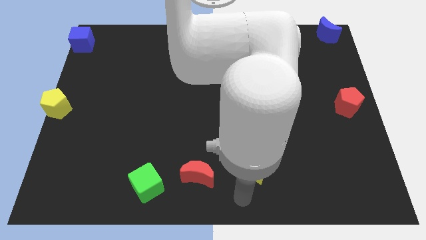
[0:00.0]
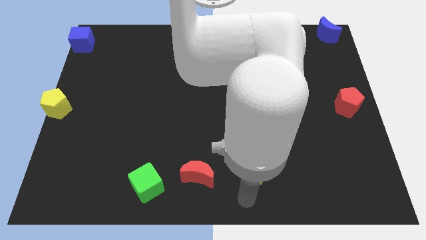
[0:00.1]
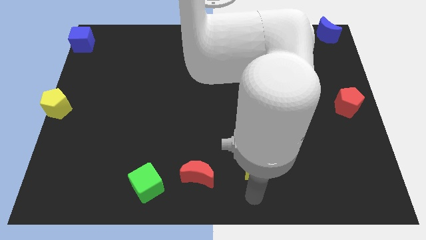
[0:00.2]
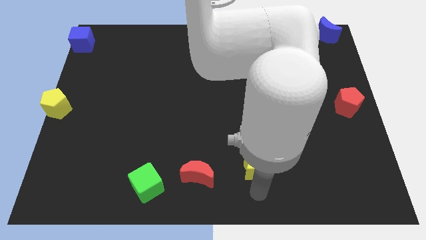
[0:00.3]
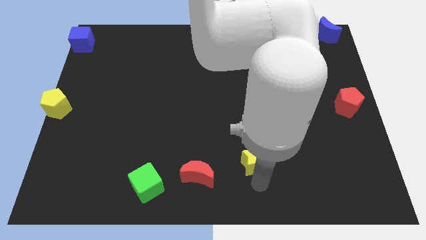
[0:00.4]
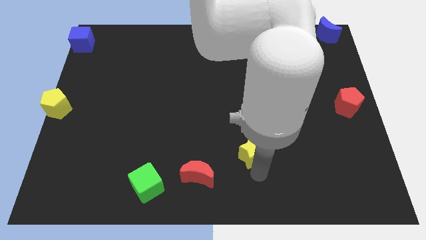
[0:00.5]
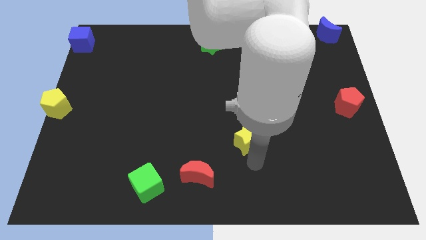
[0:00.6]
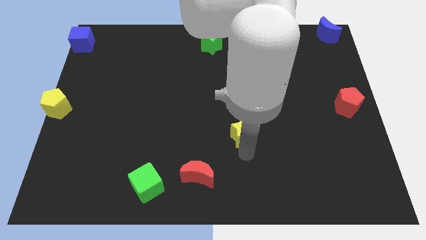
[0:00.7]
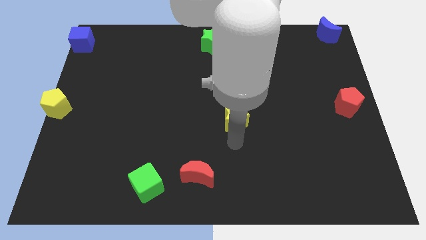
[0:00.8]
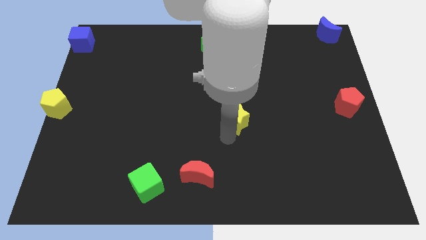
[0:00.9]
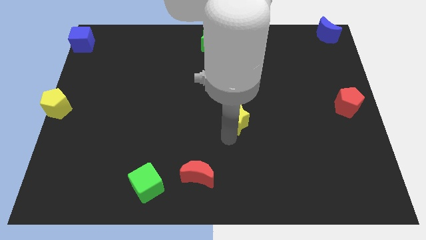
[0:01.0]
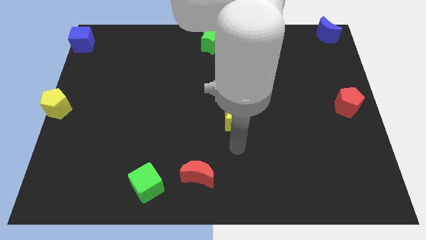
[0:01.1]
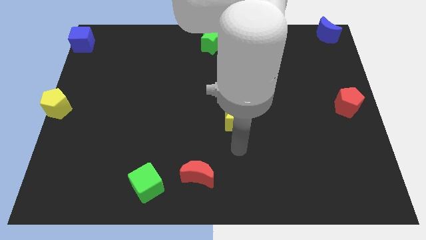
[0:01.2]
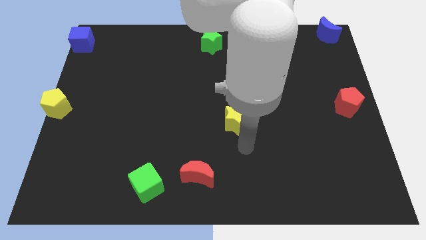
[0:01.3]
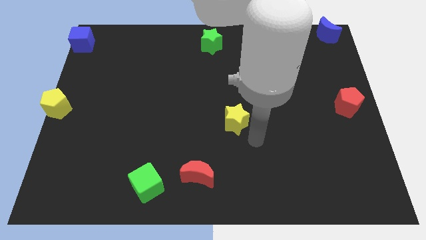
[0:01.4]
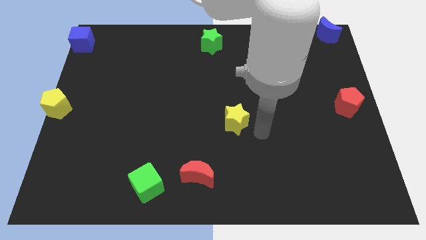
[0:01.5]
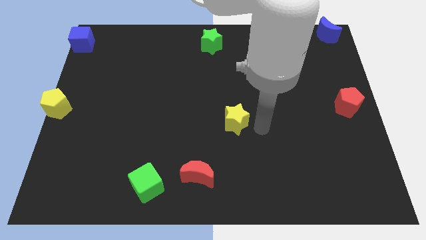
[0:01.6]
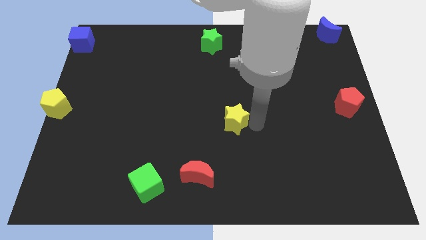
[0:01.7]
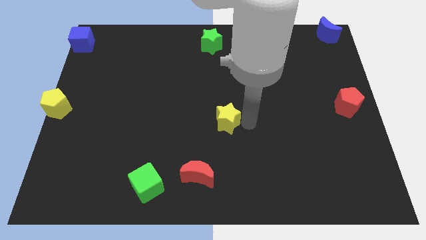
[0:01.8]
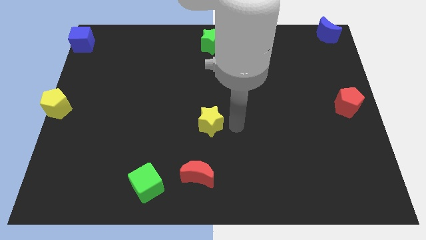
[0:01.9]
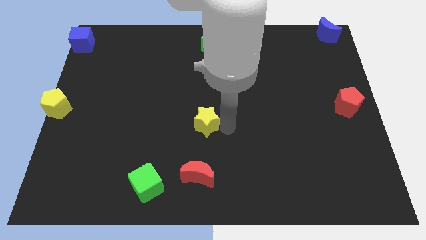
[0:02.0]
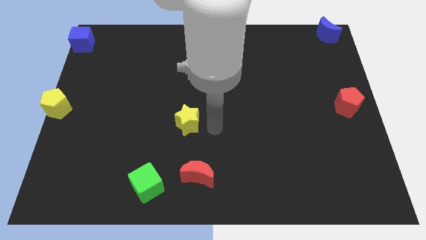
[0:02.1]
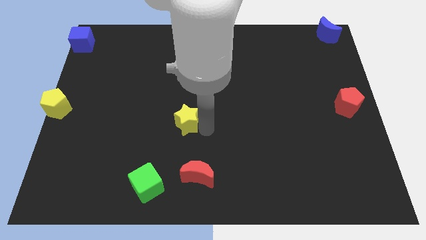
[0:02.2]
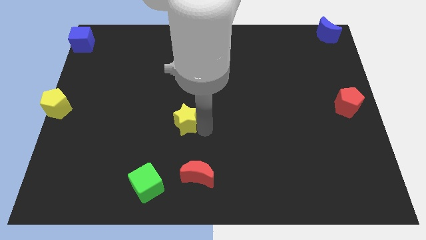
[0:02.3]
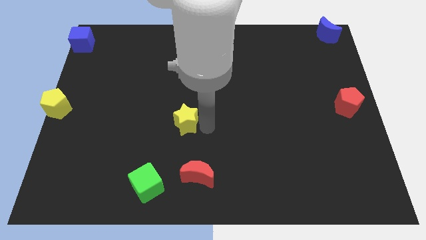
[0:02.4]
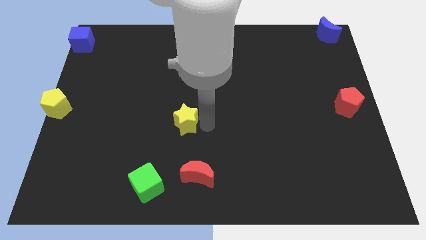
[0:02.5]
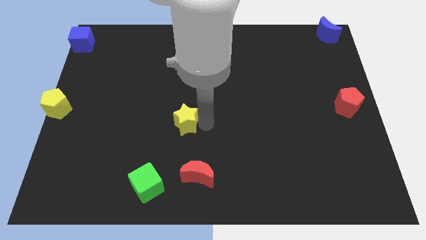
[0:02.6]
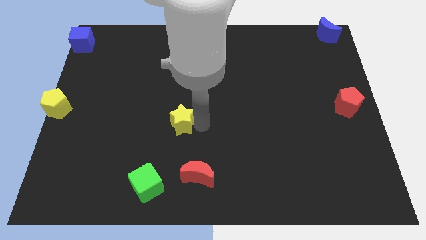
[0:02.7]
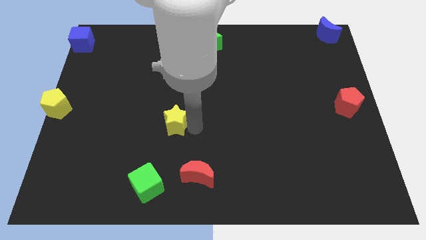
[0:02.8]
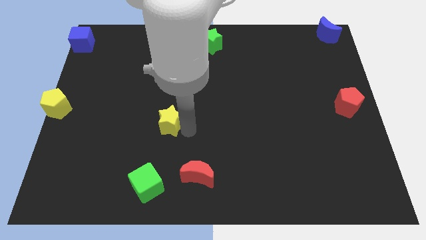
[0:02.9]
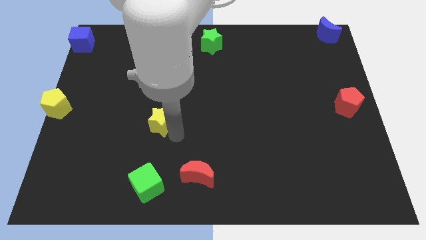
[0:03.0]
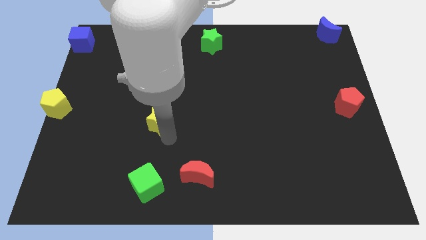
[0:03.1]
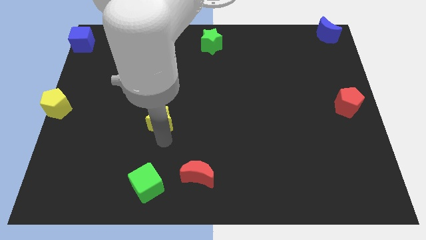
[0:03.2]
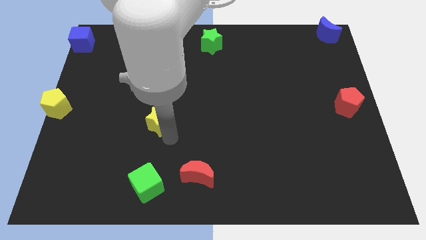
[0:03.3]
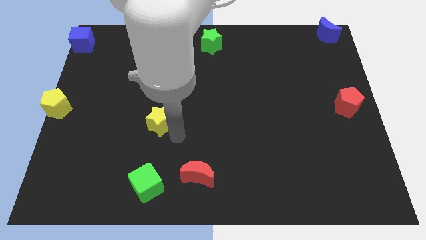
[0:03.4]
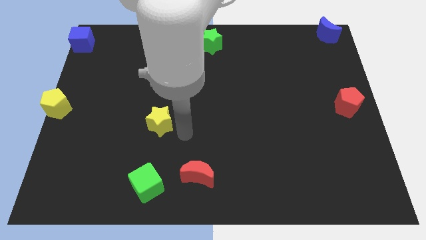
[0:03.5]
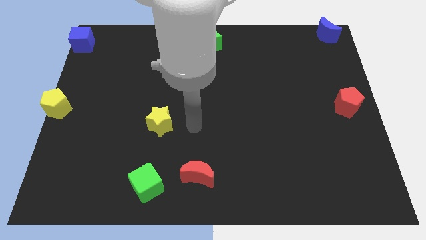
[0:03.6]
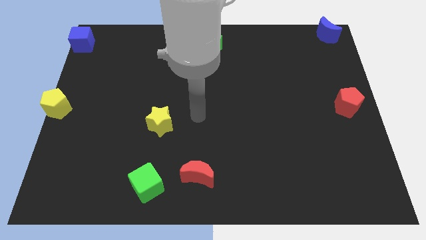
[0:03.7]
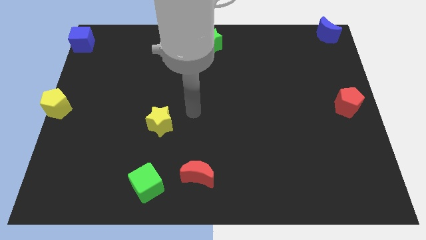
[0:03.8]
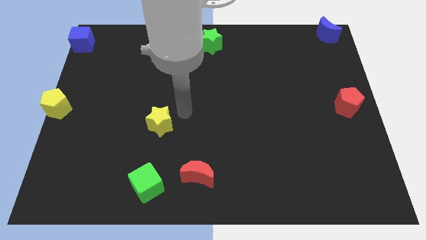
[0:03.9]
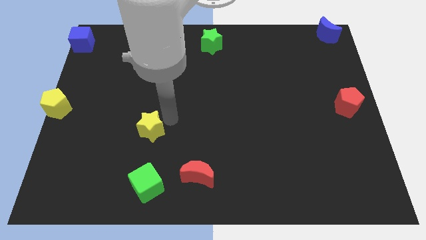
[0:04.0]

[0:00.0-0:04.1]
place the yellow star vertically above the green cube

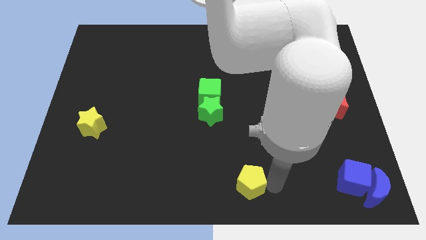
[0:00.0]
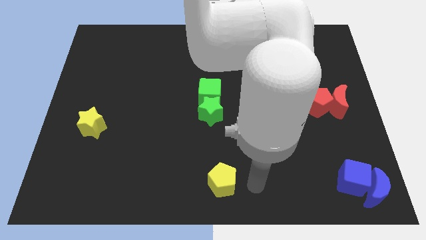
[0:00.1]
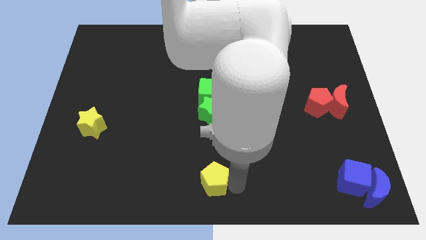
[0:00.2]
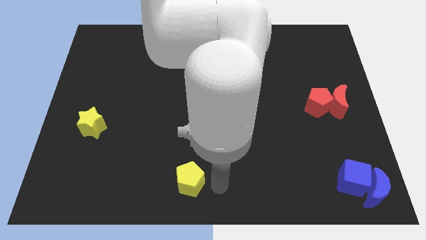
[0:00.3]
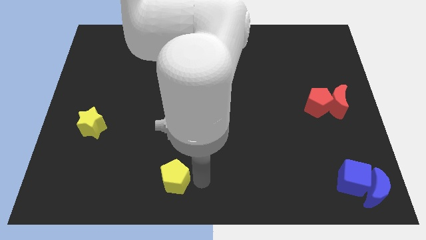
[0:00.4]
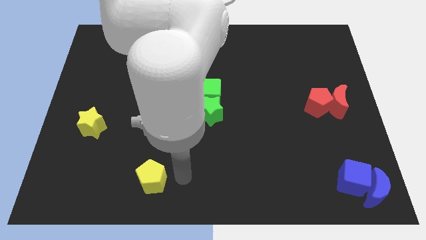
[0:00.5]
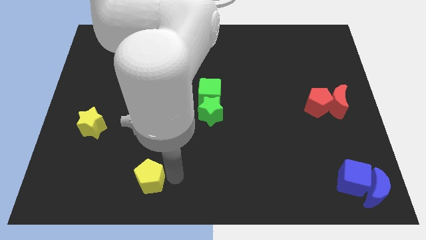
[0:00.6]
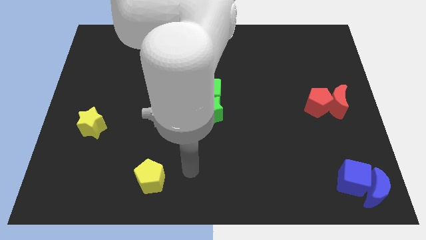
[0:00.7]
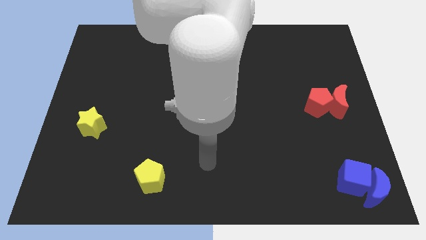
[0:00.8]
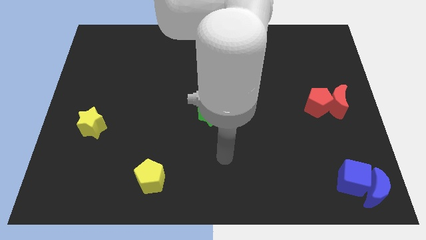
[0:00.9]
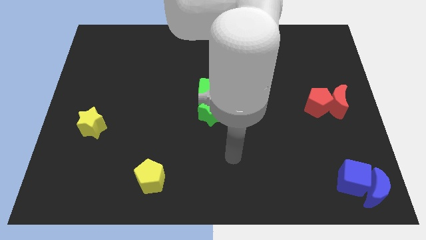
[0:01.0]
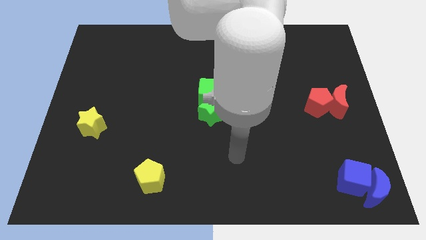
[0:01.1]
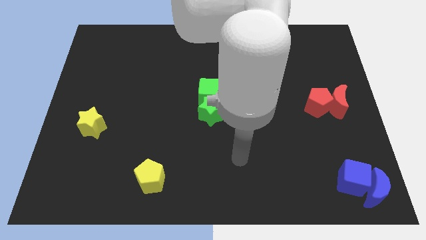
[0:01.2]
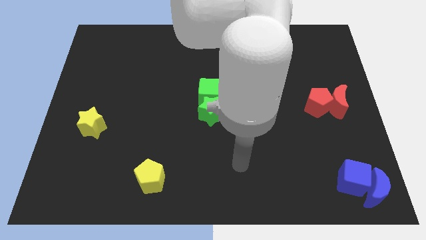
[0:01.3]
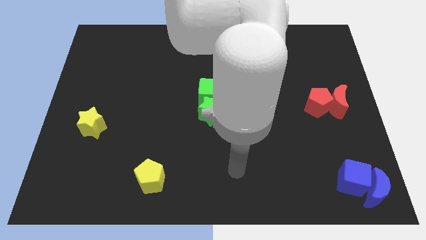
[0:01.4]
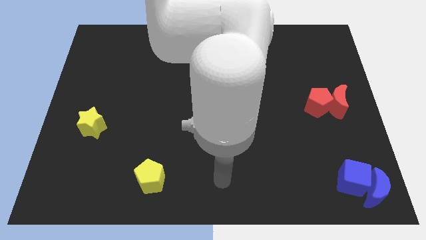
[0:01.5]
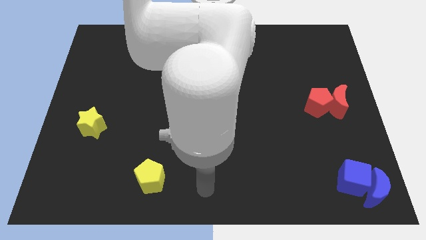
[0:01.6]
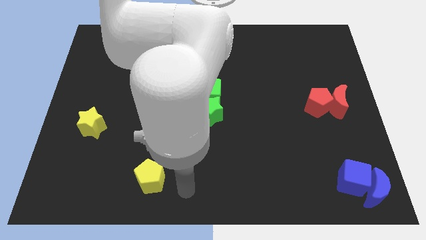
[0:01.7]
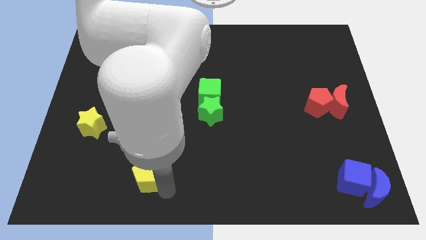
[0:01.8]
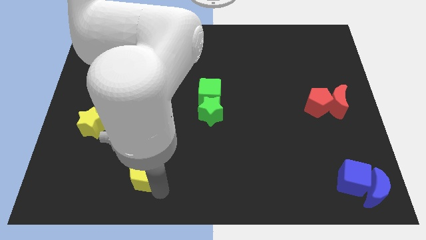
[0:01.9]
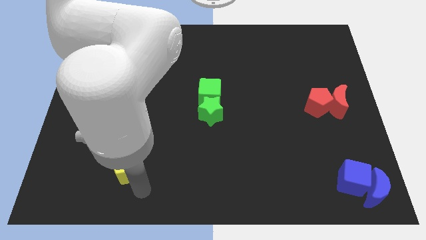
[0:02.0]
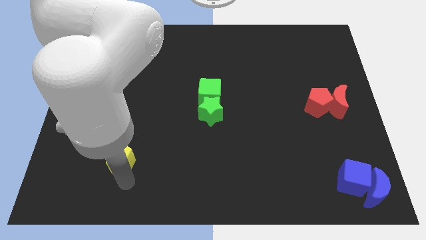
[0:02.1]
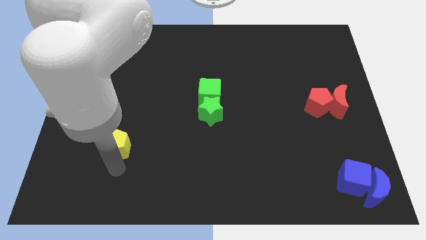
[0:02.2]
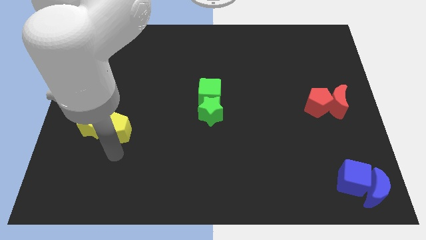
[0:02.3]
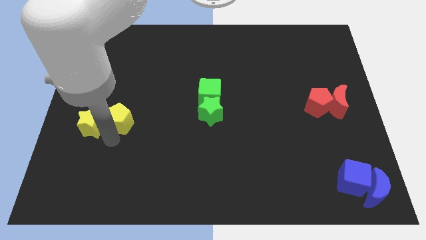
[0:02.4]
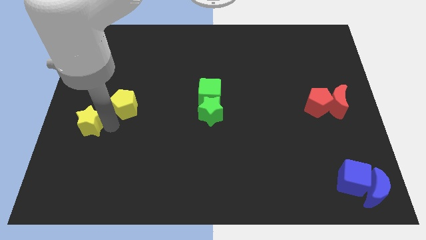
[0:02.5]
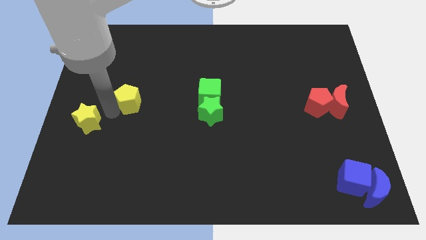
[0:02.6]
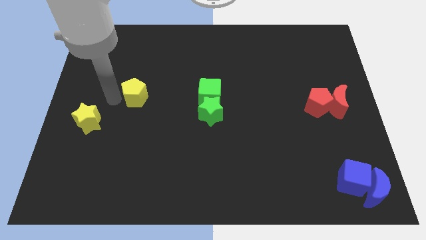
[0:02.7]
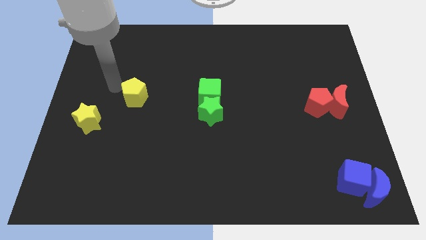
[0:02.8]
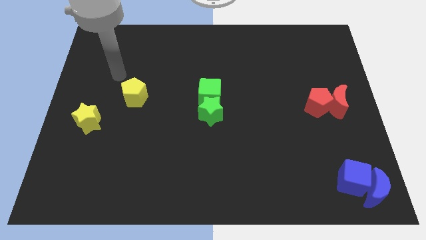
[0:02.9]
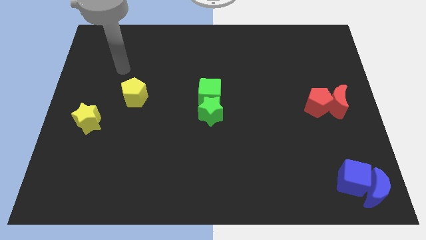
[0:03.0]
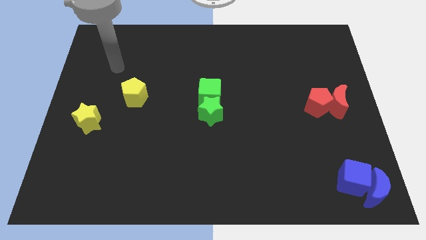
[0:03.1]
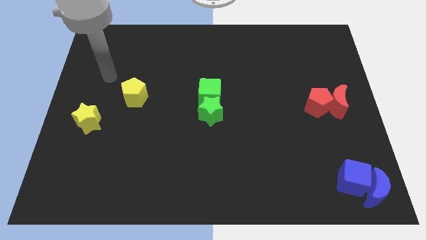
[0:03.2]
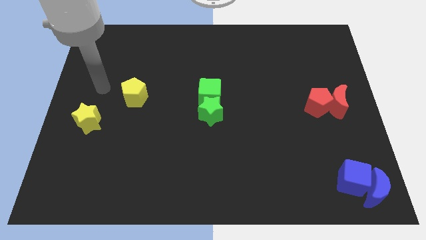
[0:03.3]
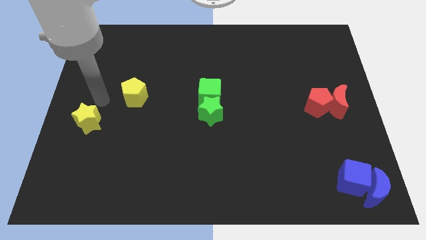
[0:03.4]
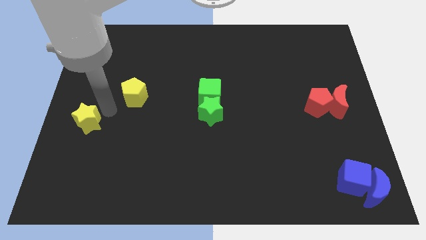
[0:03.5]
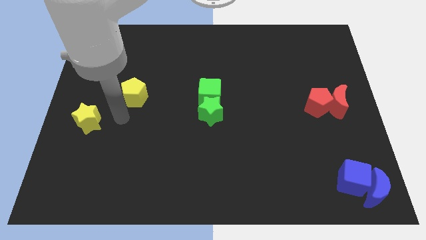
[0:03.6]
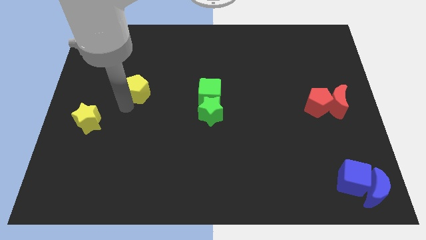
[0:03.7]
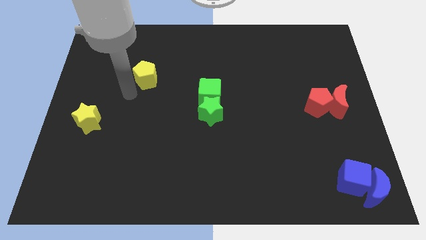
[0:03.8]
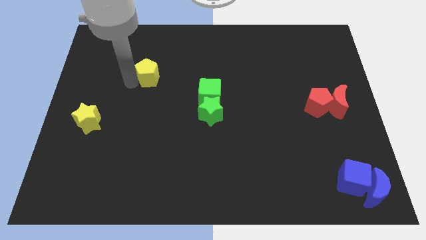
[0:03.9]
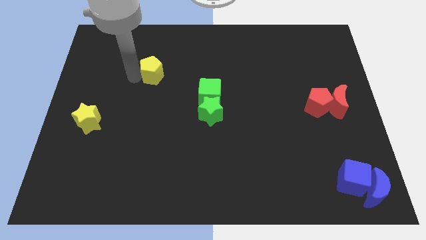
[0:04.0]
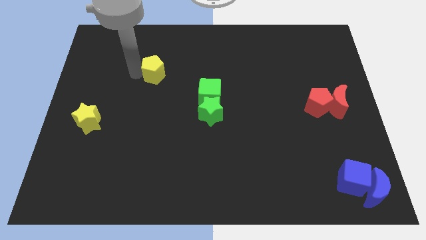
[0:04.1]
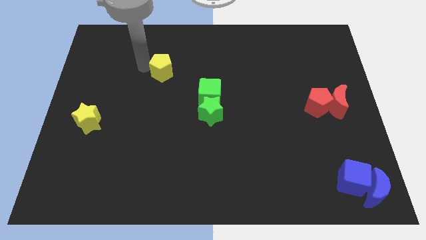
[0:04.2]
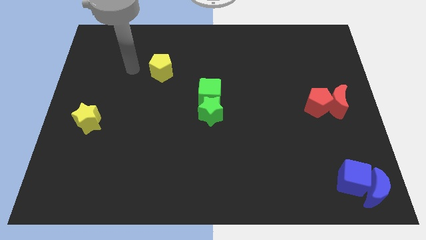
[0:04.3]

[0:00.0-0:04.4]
move the yellow pentagon towards the top center of the board

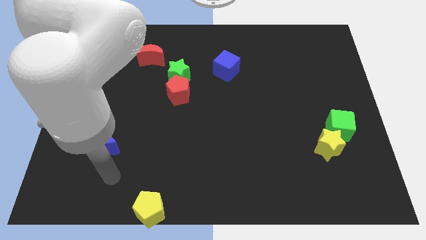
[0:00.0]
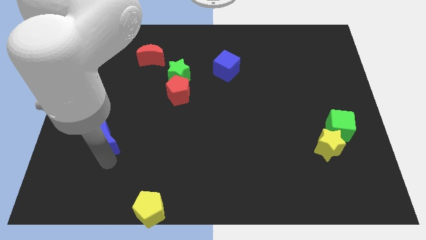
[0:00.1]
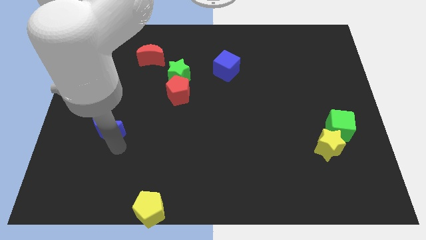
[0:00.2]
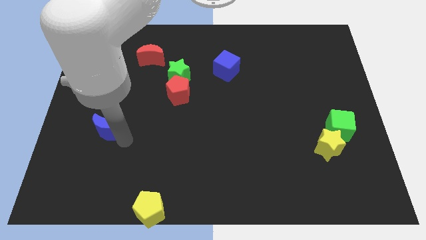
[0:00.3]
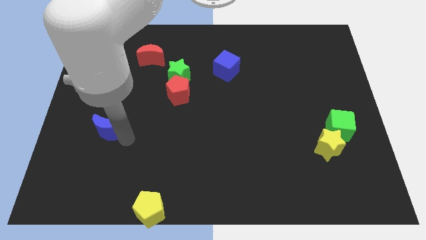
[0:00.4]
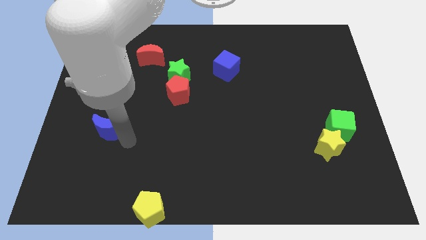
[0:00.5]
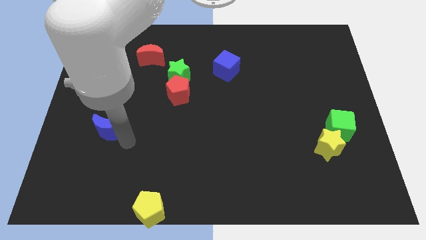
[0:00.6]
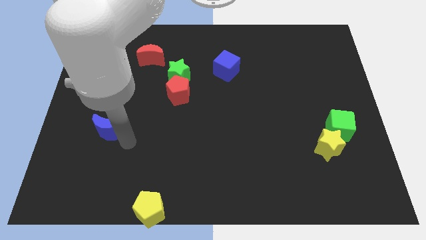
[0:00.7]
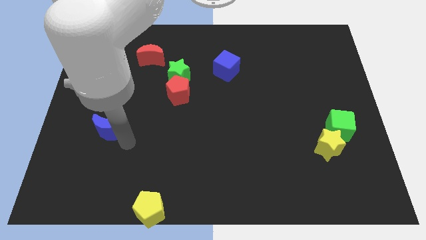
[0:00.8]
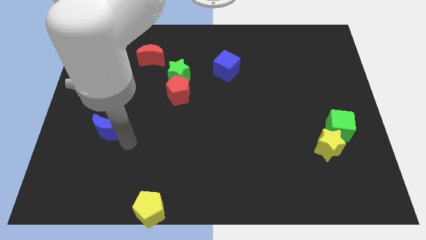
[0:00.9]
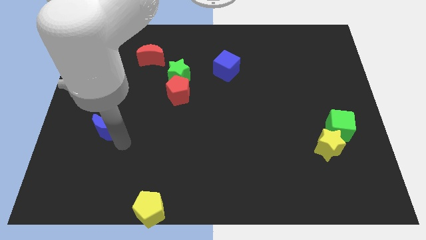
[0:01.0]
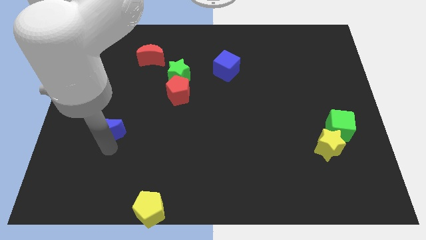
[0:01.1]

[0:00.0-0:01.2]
slightly push the blue moon up
